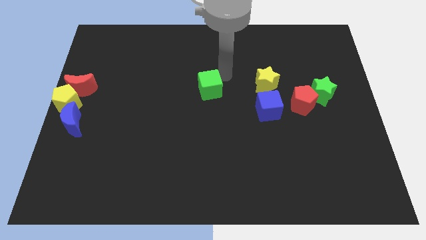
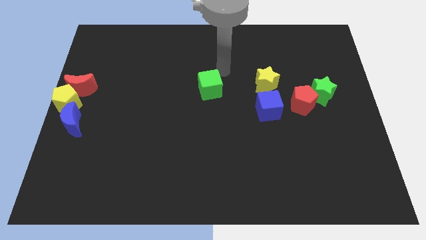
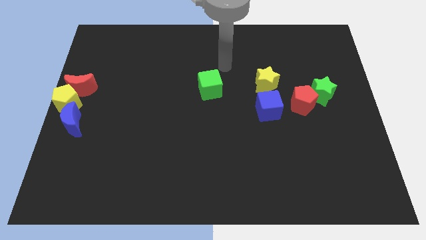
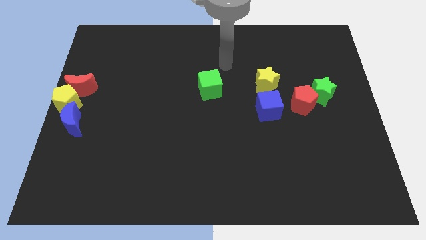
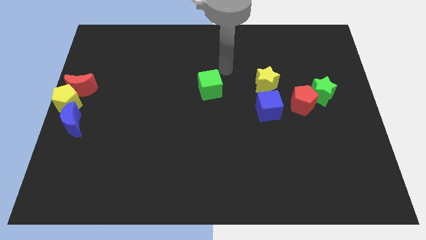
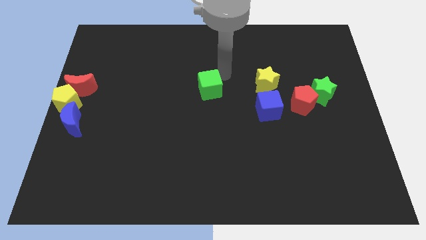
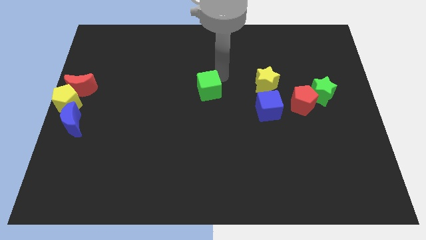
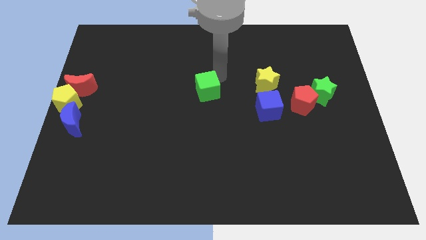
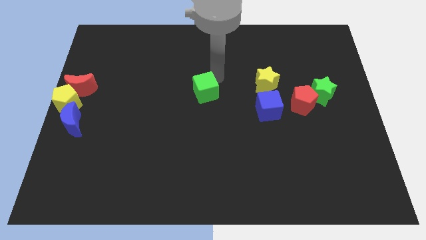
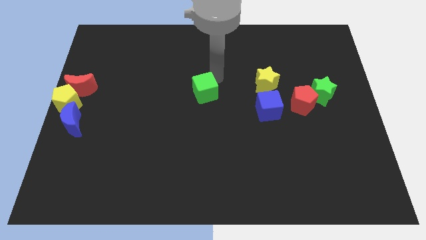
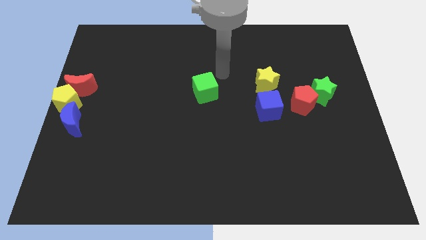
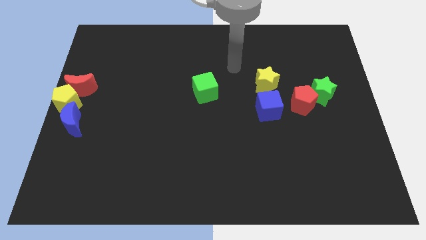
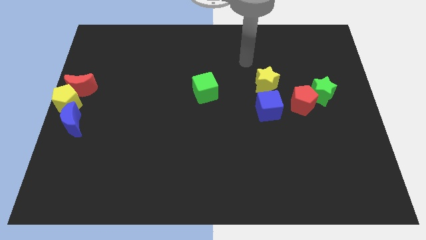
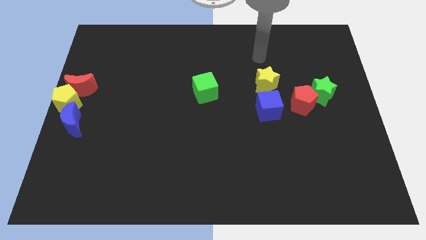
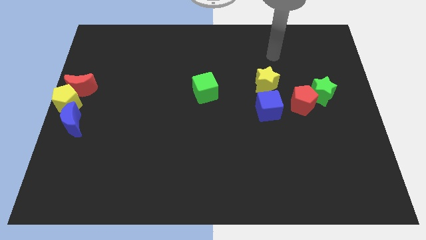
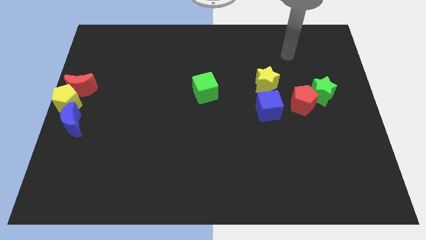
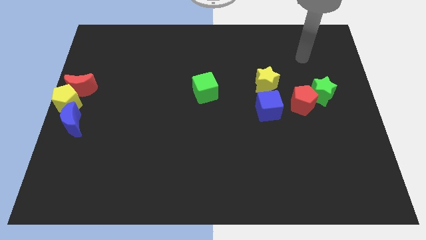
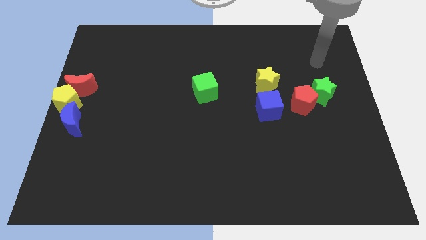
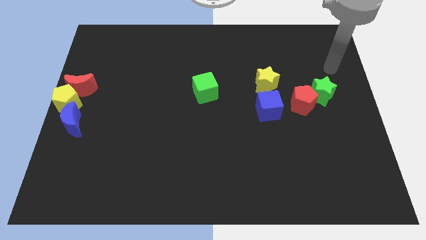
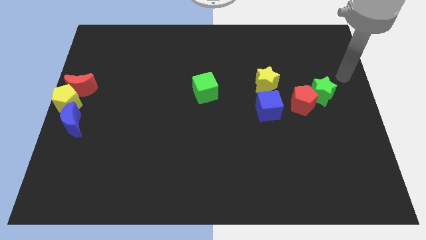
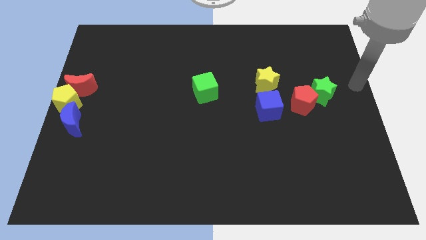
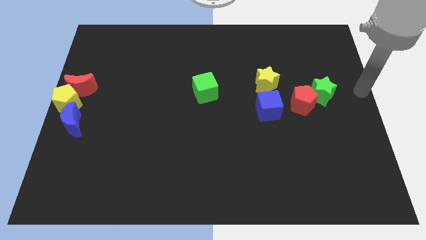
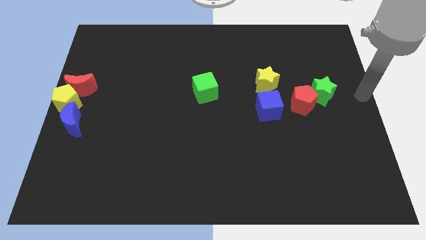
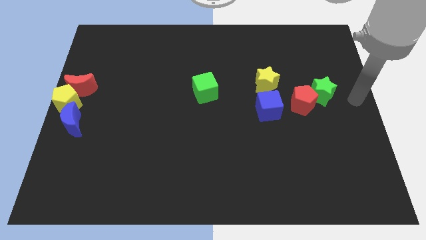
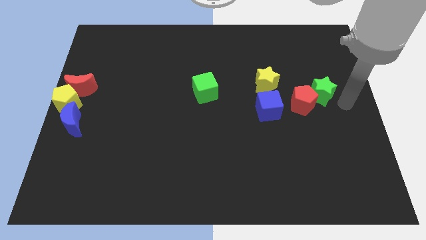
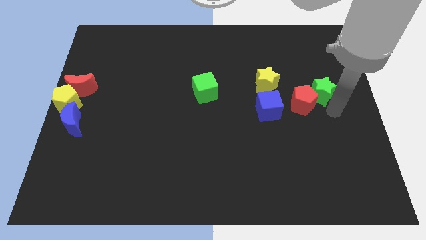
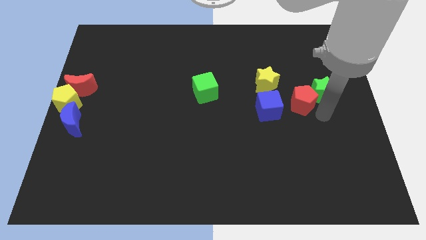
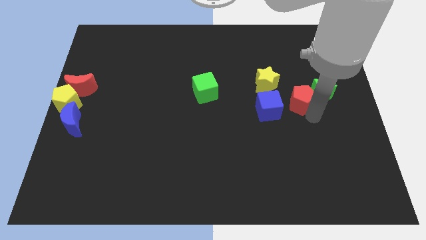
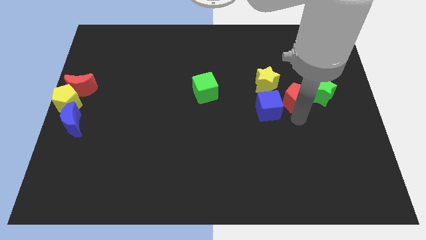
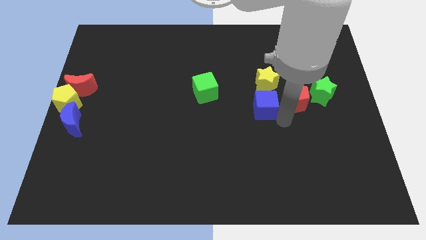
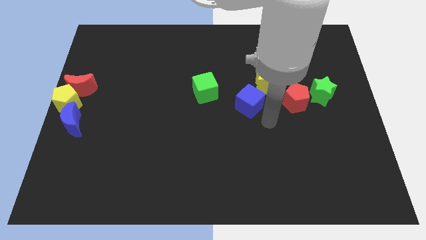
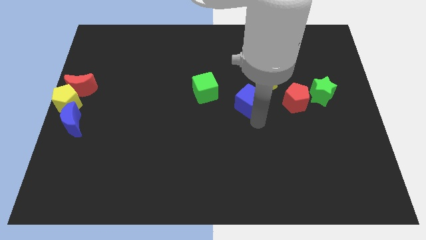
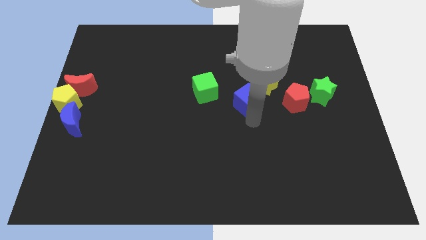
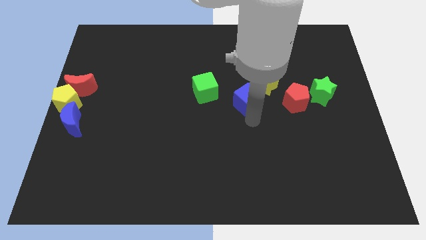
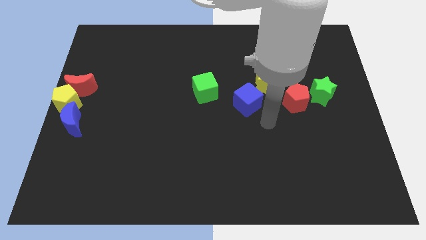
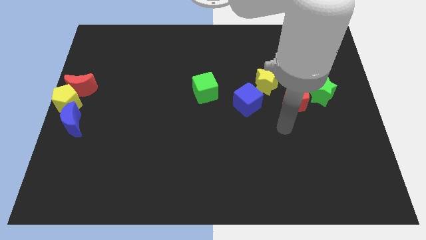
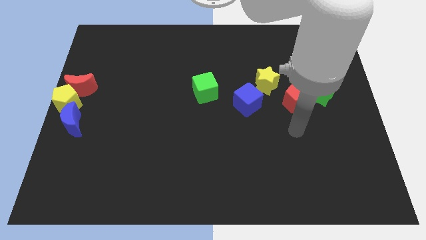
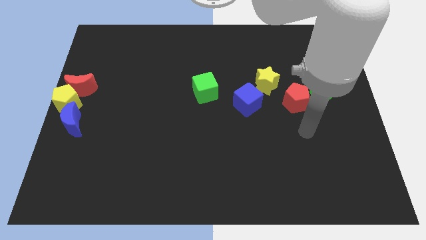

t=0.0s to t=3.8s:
slightly move the blue cube to left side

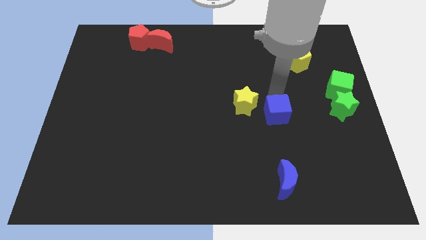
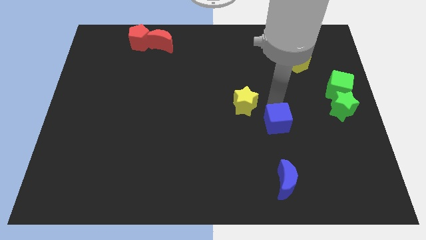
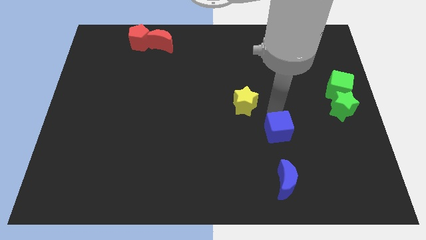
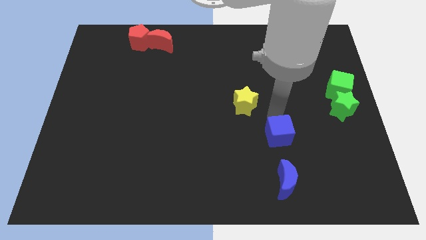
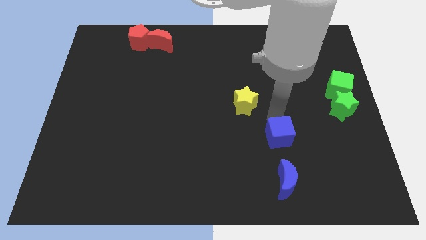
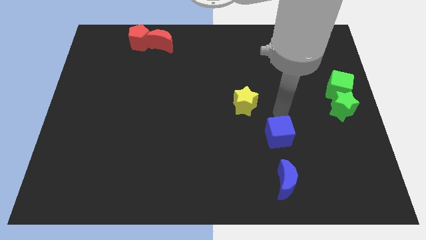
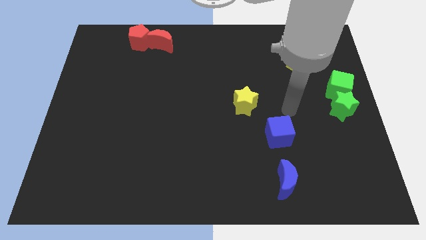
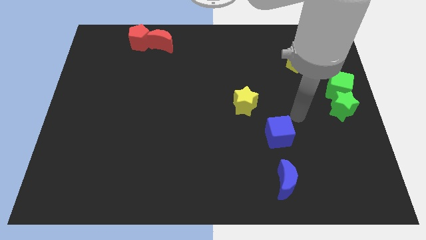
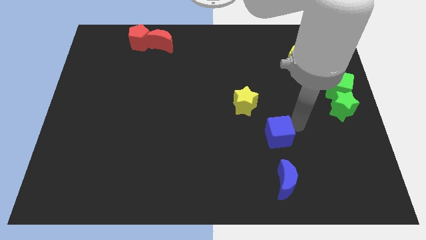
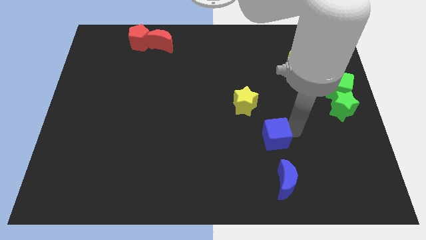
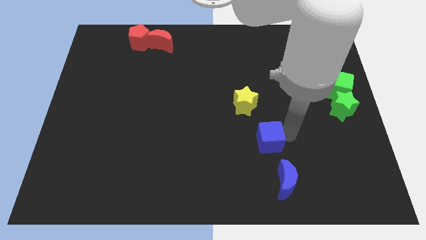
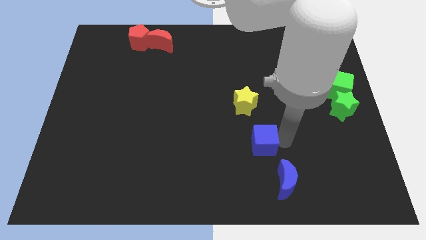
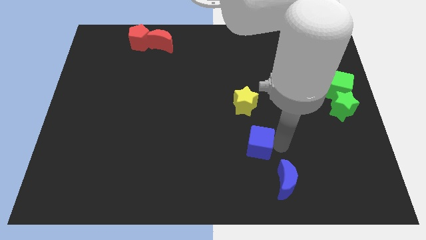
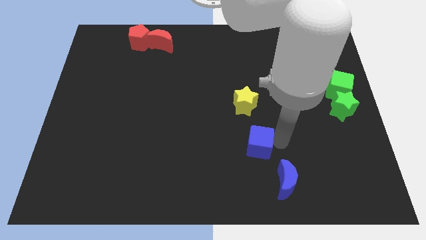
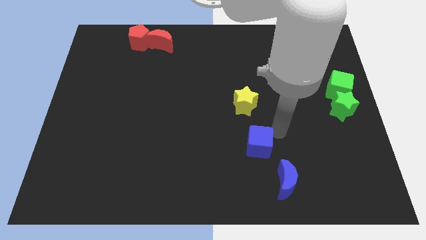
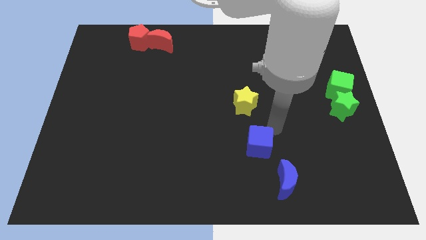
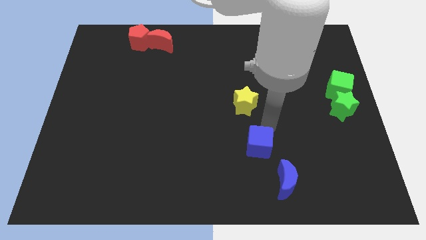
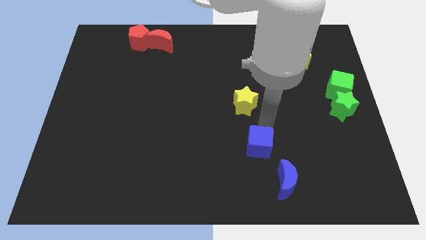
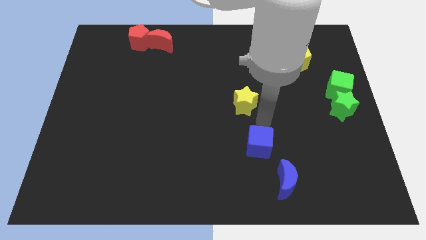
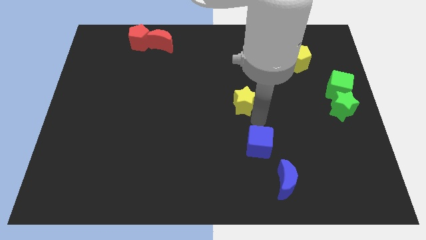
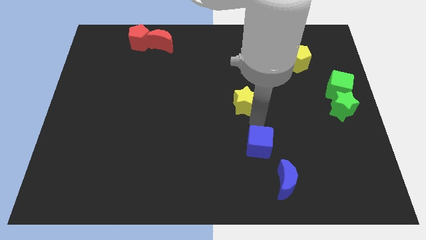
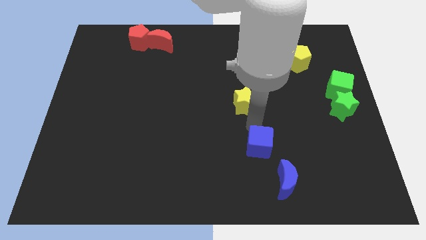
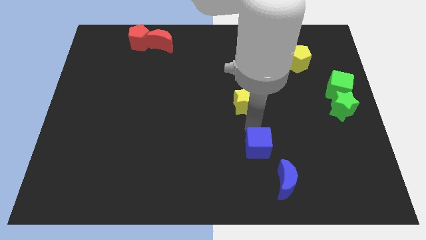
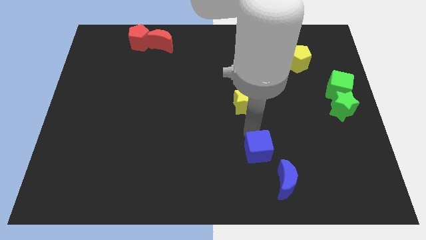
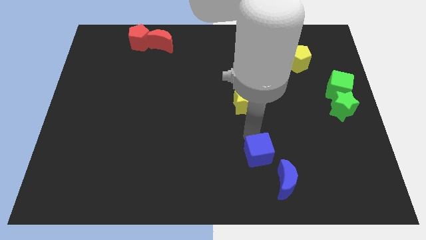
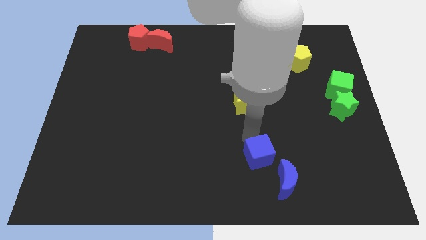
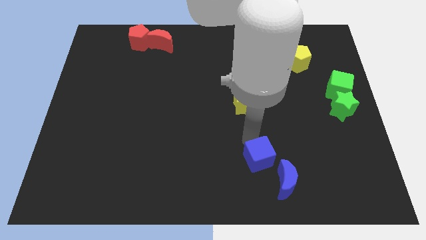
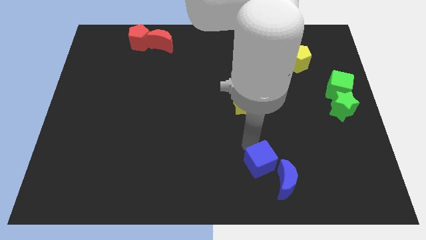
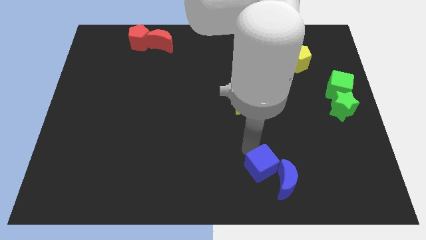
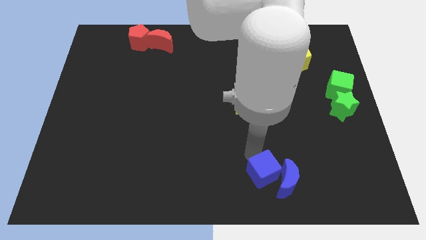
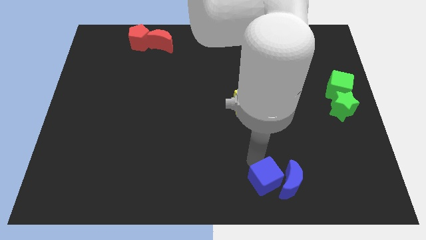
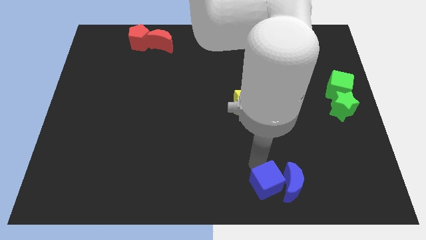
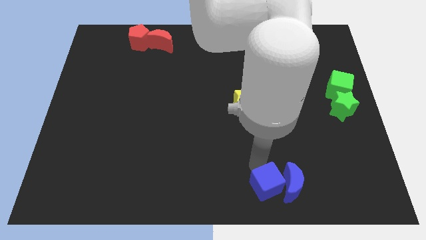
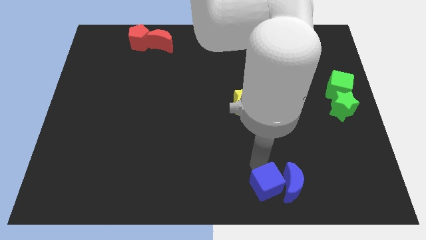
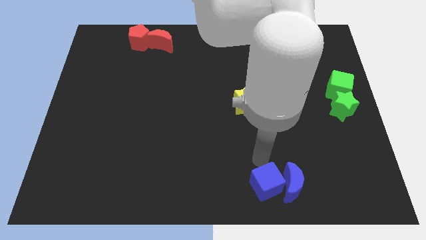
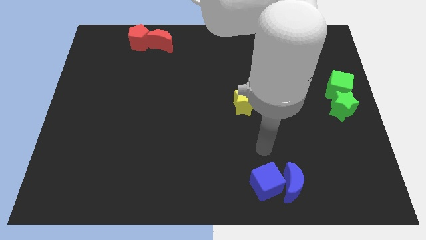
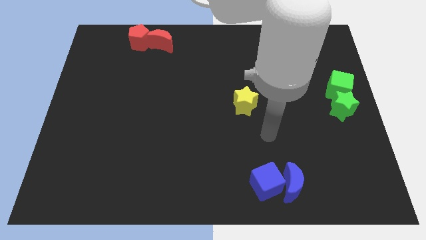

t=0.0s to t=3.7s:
push the blue cube into the blue moon

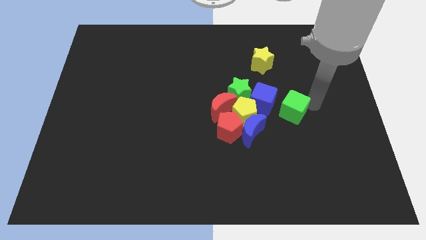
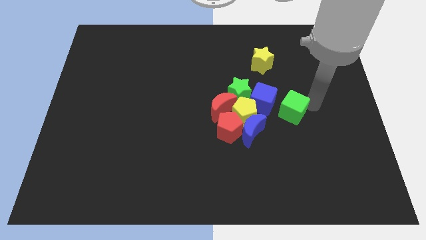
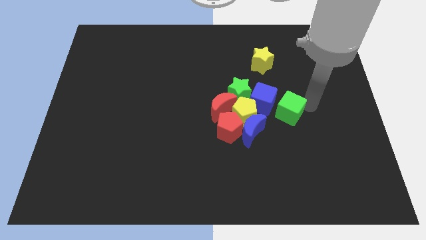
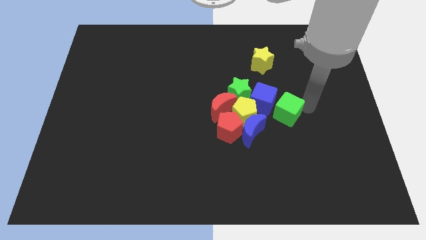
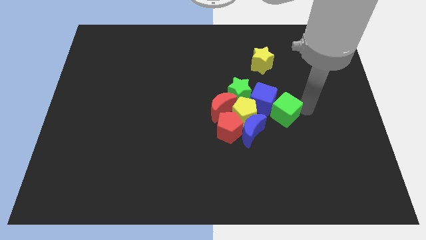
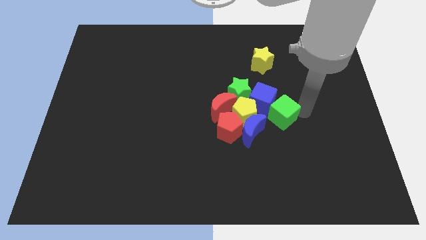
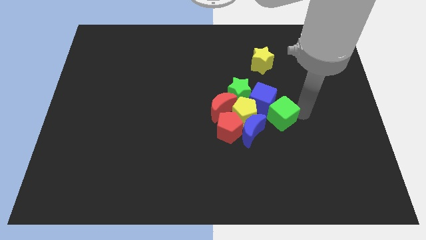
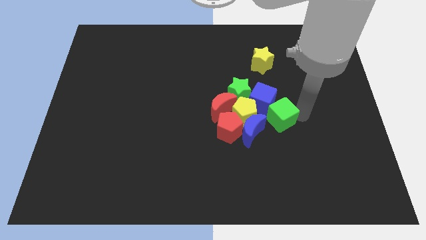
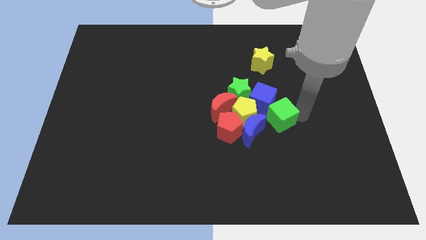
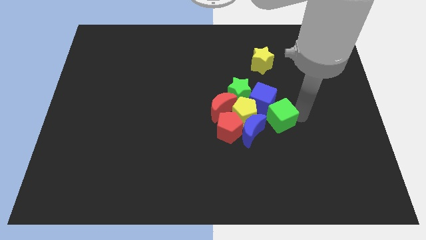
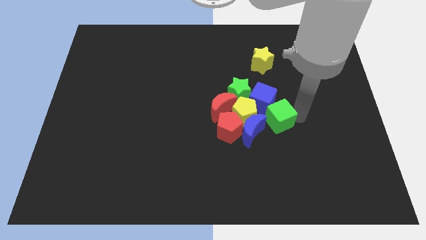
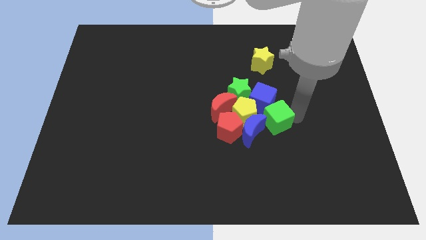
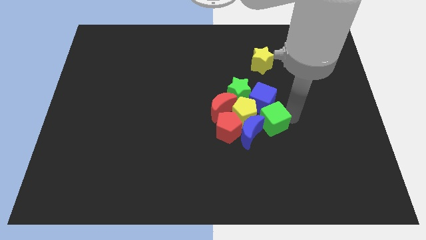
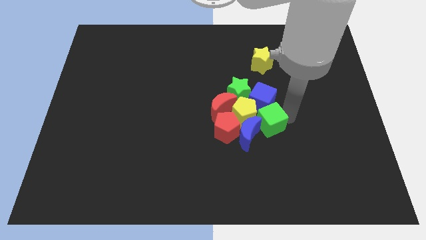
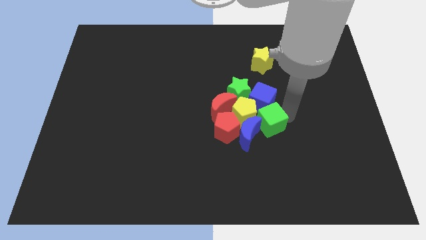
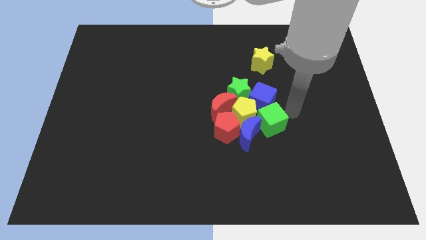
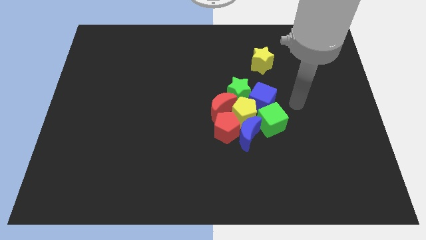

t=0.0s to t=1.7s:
push the green cube into the top side of the blue moon
